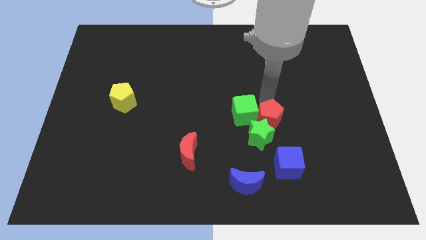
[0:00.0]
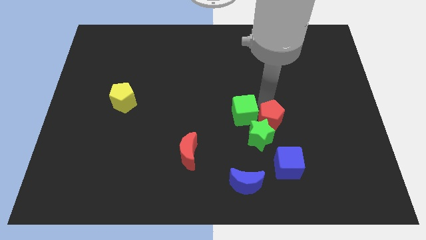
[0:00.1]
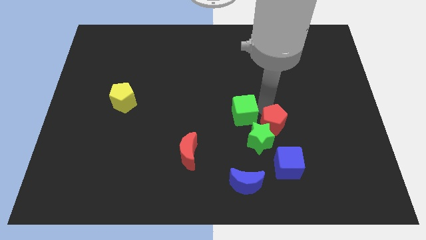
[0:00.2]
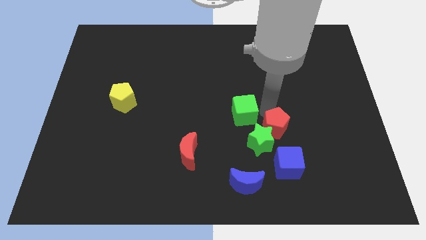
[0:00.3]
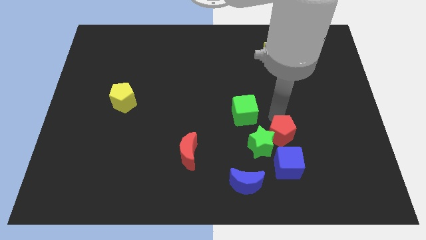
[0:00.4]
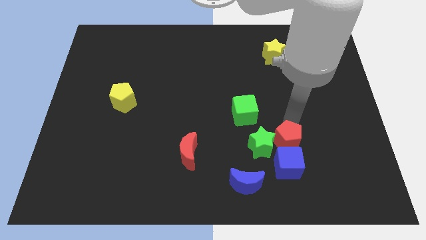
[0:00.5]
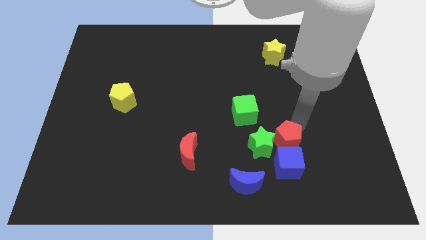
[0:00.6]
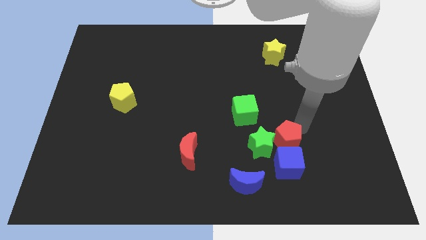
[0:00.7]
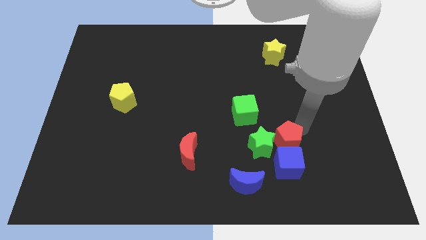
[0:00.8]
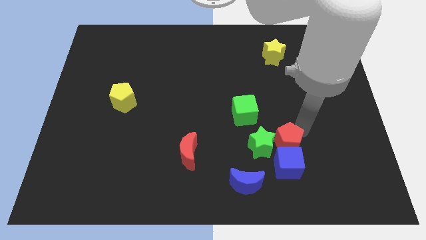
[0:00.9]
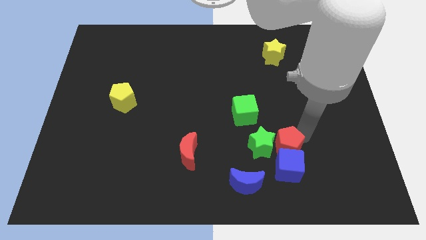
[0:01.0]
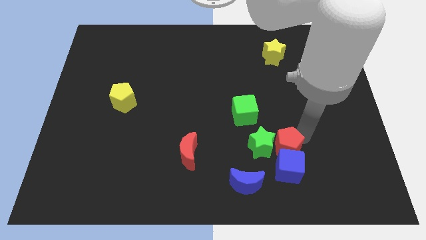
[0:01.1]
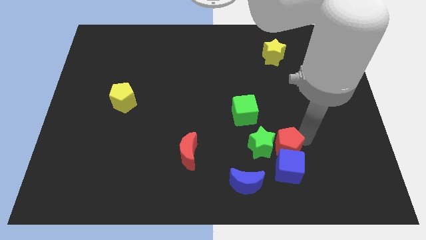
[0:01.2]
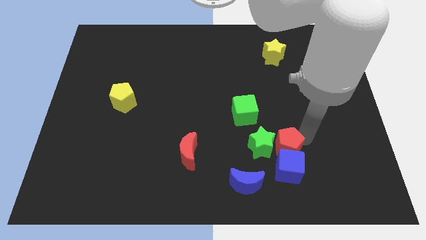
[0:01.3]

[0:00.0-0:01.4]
move the red pentagon to the top of the blue cube

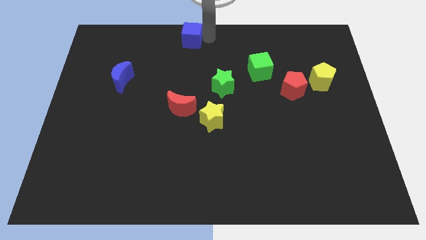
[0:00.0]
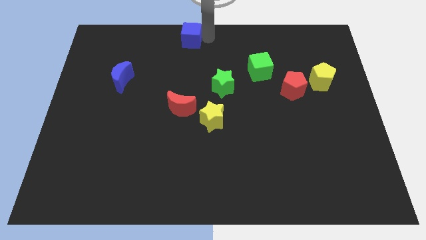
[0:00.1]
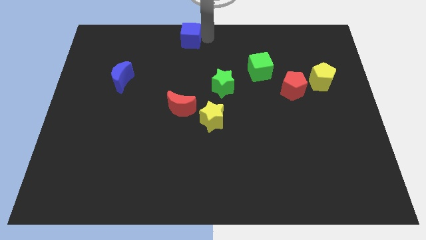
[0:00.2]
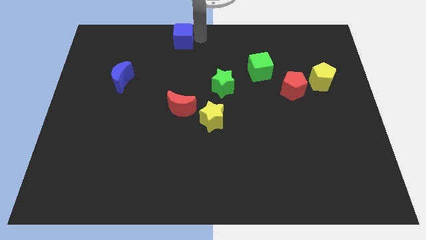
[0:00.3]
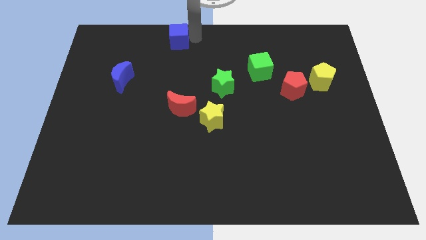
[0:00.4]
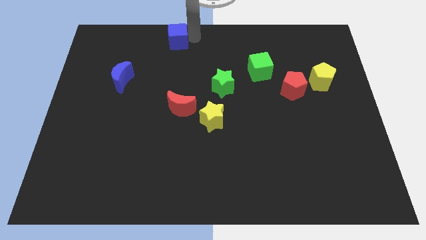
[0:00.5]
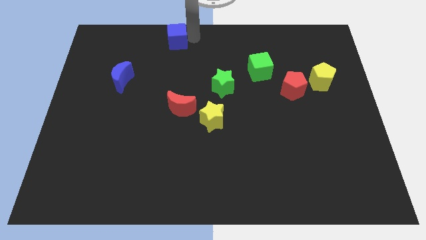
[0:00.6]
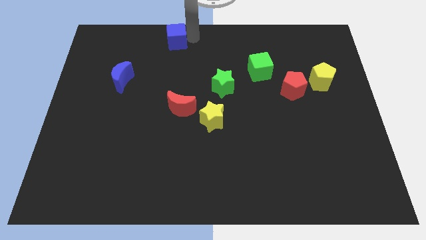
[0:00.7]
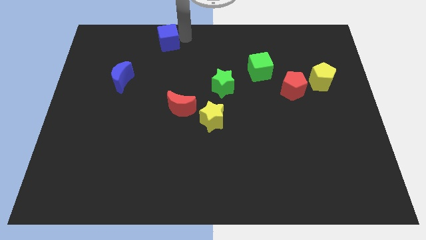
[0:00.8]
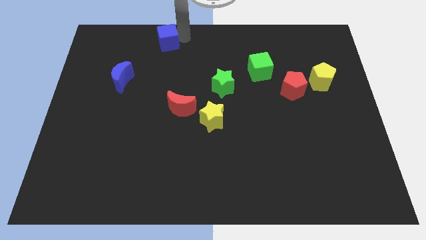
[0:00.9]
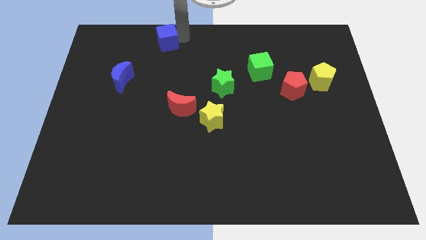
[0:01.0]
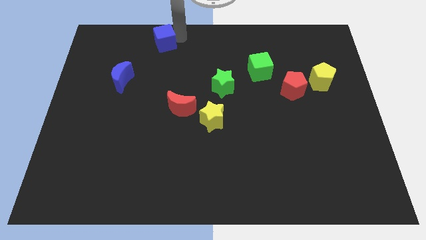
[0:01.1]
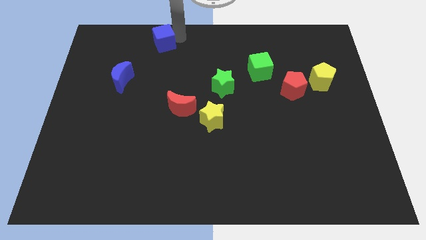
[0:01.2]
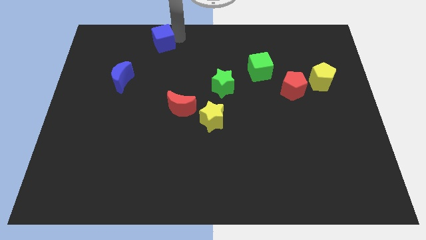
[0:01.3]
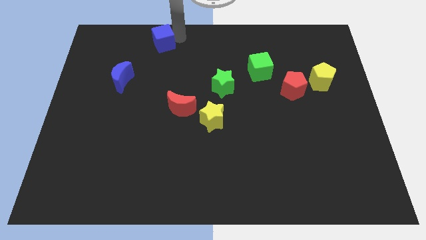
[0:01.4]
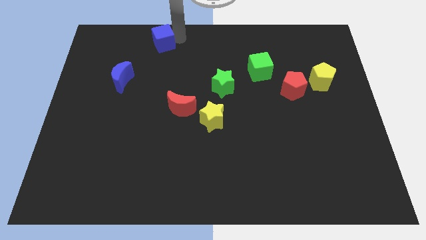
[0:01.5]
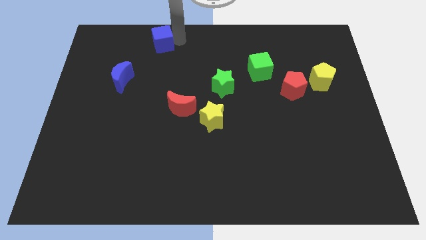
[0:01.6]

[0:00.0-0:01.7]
place blue cube diagonally to the top right of the blue moon

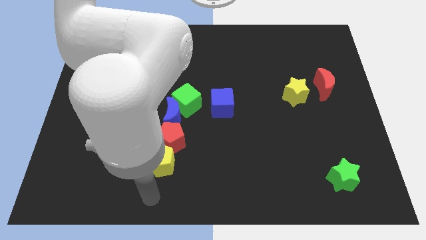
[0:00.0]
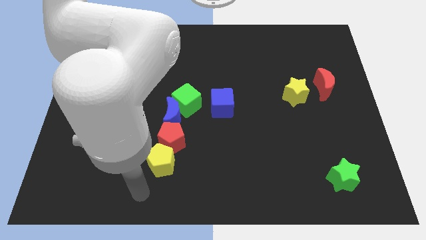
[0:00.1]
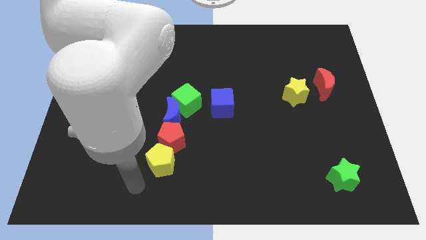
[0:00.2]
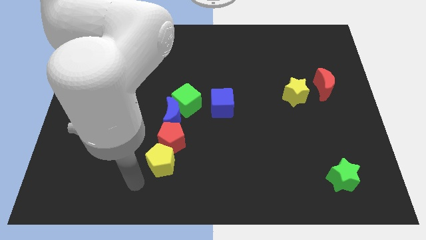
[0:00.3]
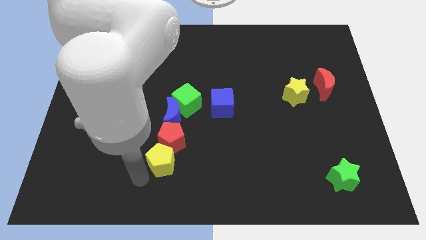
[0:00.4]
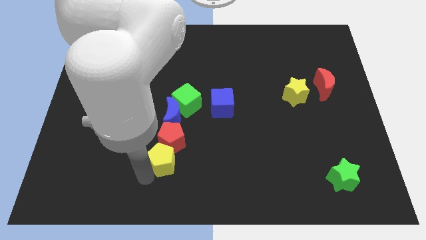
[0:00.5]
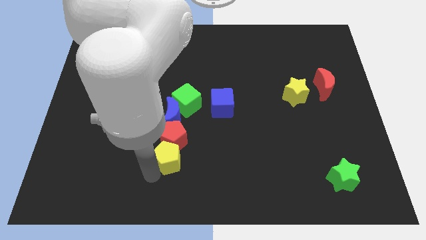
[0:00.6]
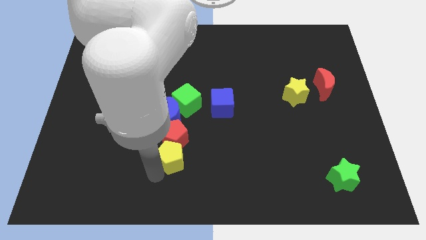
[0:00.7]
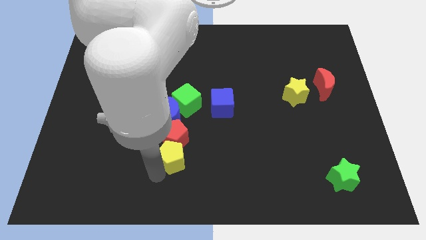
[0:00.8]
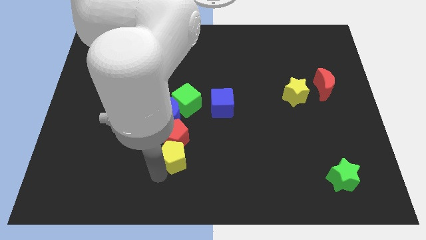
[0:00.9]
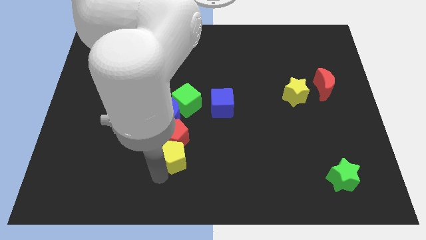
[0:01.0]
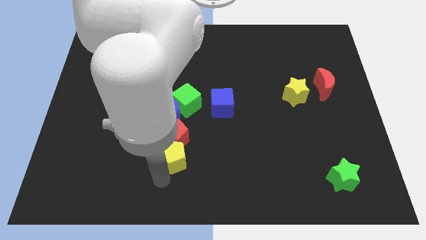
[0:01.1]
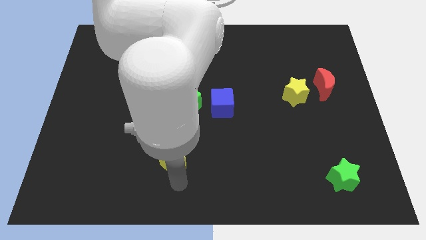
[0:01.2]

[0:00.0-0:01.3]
push the yellow pentagon in to the red pentagon

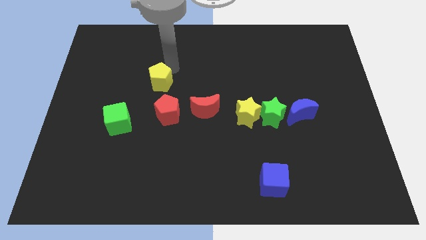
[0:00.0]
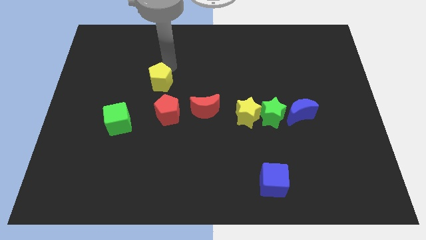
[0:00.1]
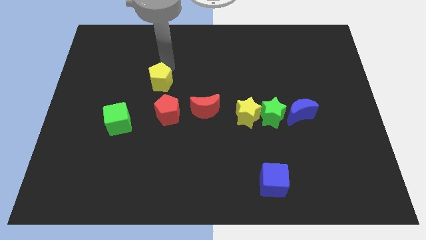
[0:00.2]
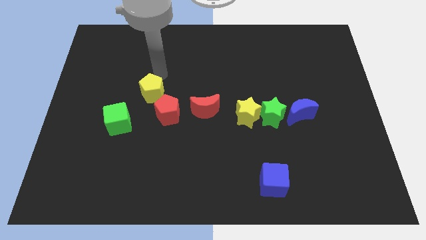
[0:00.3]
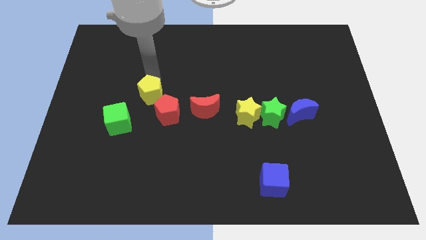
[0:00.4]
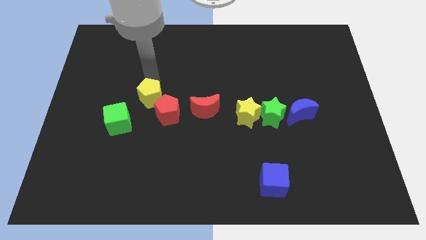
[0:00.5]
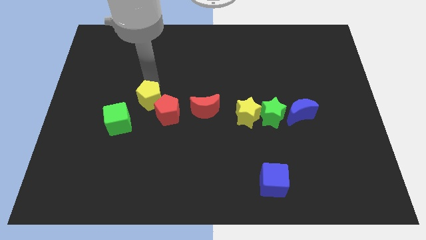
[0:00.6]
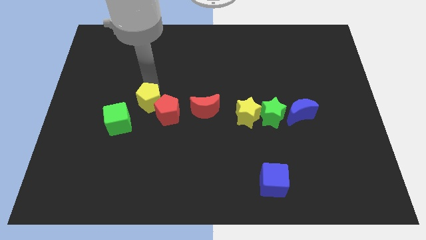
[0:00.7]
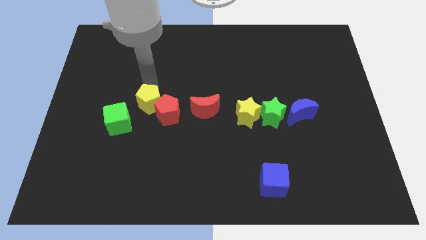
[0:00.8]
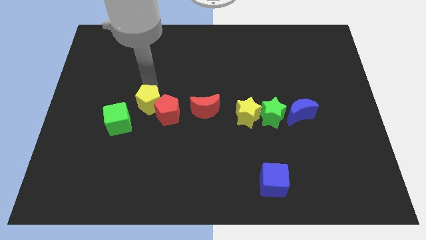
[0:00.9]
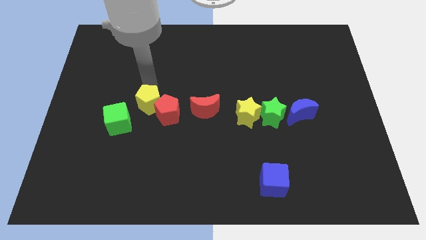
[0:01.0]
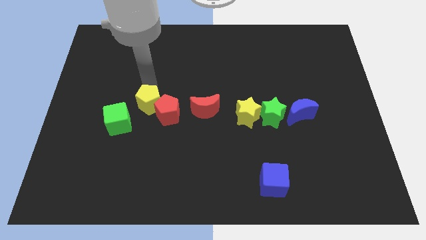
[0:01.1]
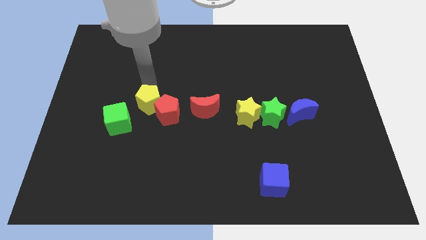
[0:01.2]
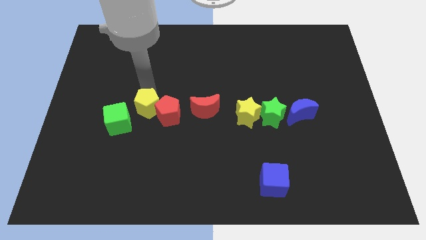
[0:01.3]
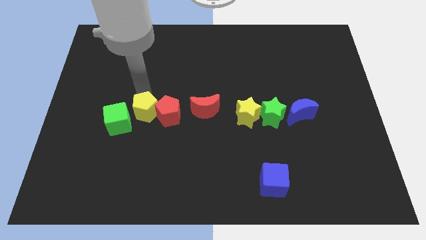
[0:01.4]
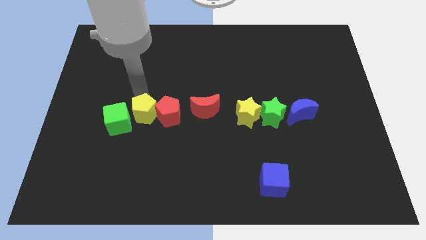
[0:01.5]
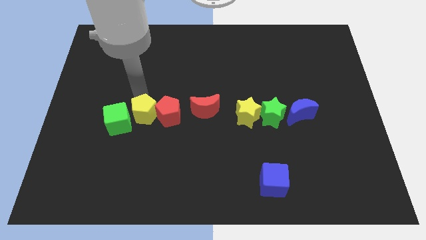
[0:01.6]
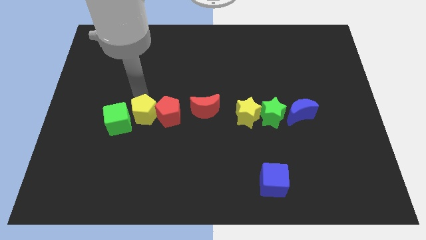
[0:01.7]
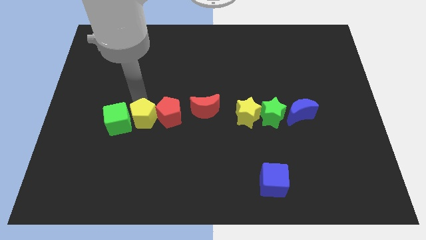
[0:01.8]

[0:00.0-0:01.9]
push the yellow pentagon into the red pentagon

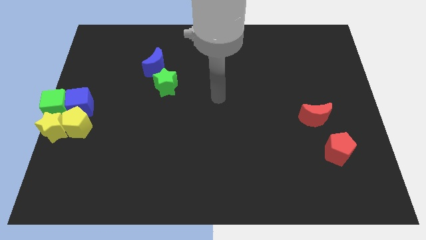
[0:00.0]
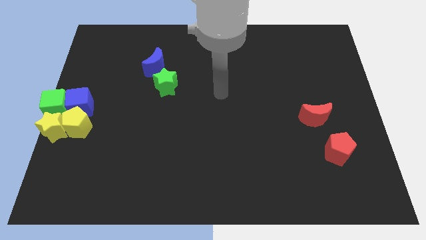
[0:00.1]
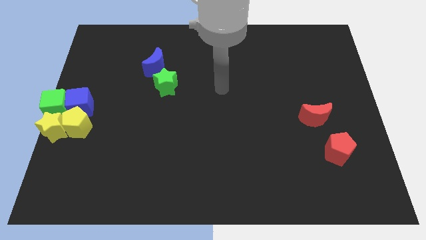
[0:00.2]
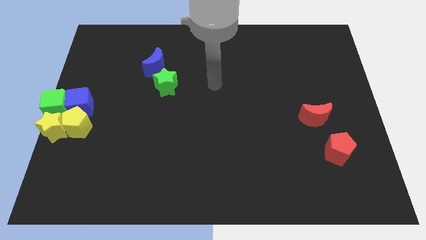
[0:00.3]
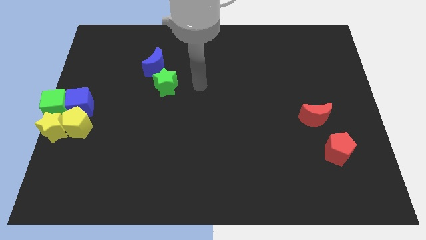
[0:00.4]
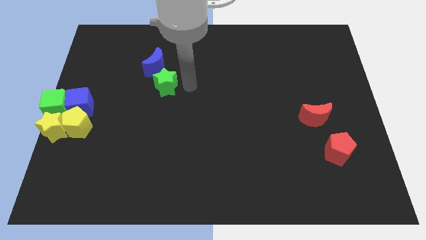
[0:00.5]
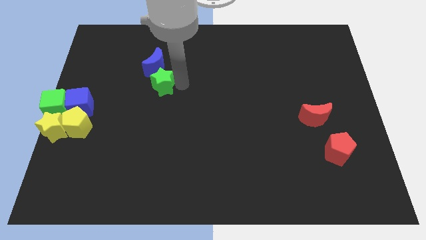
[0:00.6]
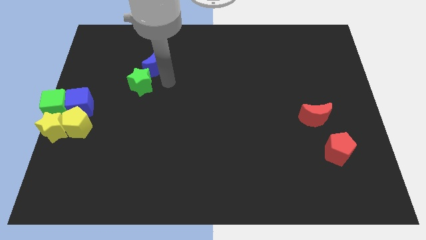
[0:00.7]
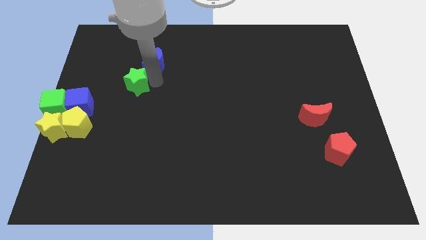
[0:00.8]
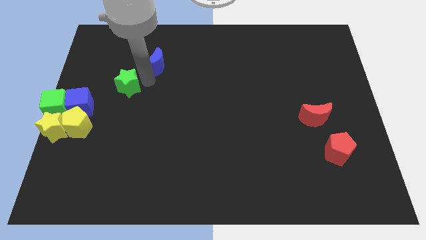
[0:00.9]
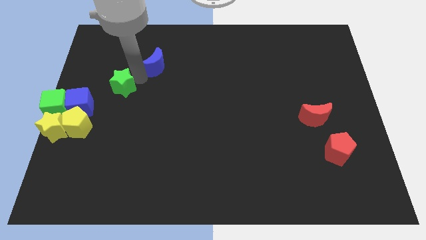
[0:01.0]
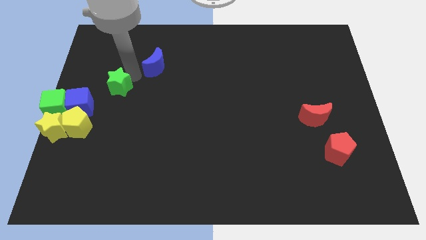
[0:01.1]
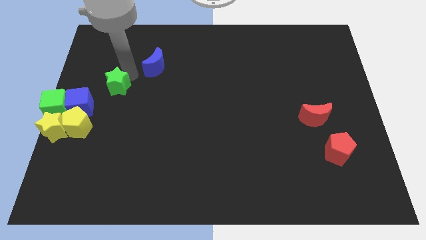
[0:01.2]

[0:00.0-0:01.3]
move green cube to the bottom left of blue moon

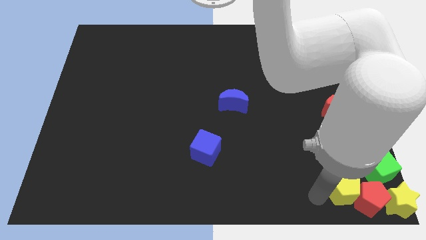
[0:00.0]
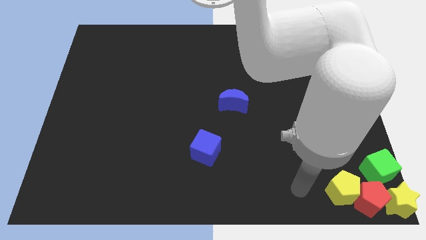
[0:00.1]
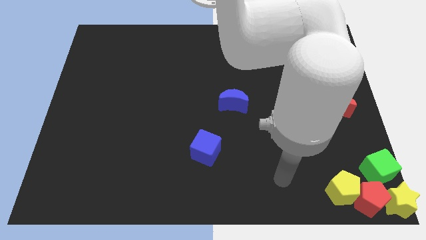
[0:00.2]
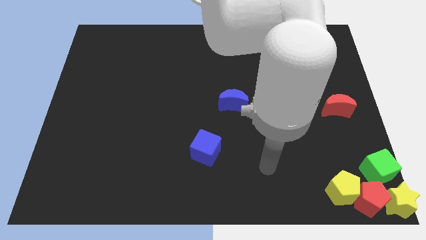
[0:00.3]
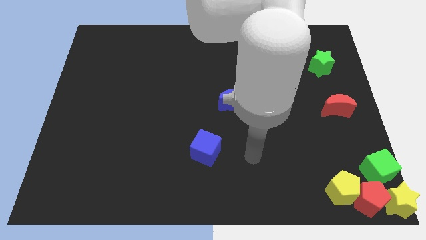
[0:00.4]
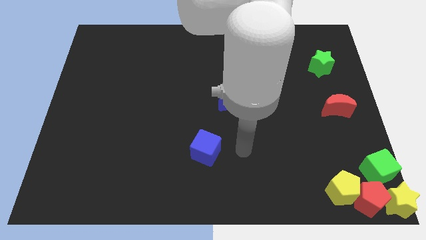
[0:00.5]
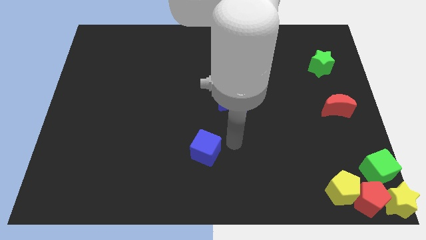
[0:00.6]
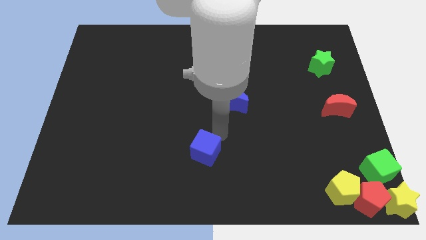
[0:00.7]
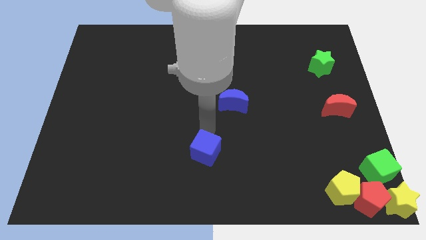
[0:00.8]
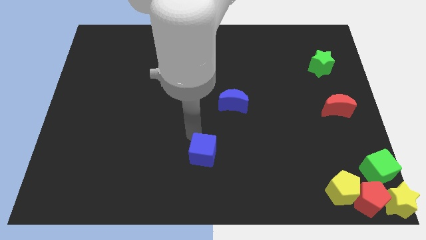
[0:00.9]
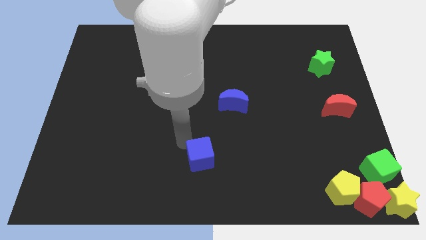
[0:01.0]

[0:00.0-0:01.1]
place your arm away from the yellow pentagon

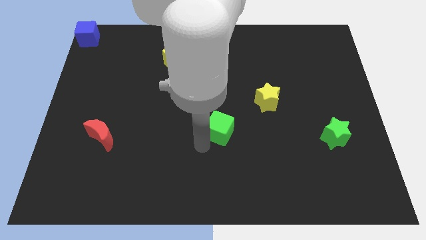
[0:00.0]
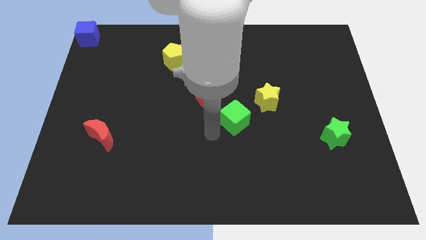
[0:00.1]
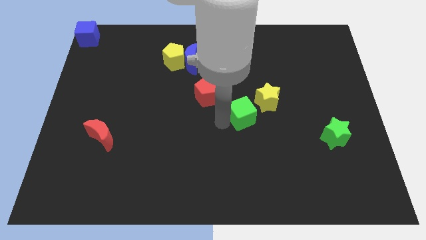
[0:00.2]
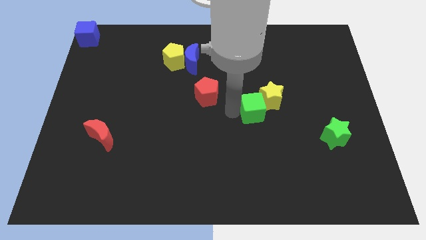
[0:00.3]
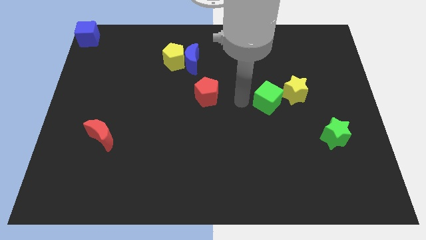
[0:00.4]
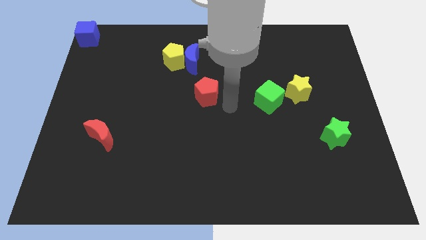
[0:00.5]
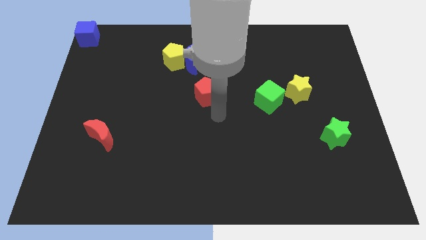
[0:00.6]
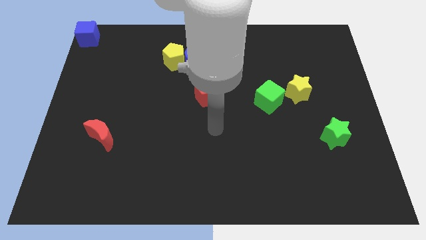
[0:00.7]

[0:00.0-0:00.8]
push the green cube and yellow star towards the right side of the board
